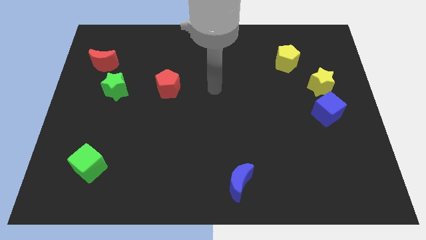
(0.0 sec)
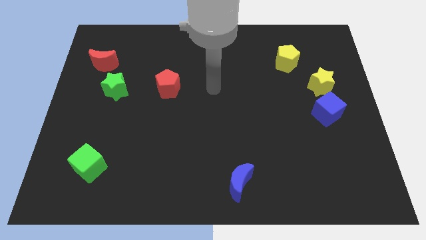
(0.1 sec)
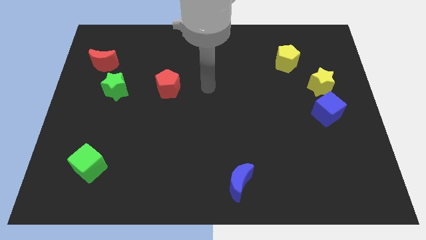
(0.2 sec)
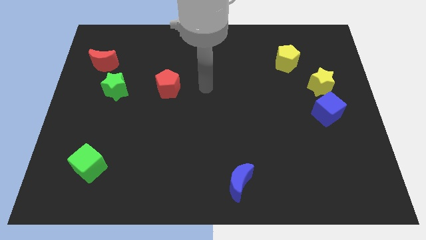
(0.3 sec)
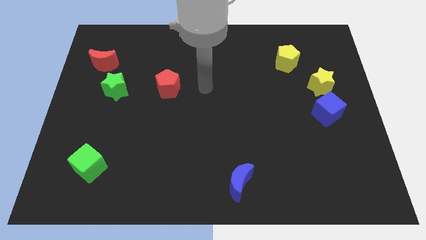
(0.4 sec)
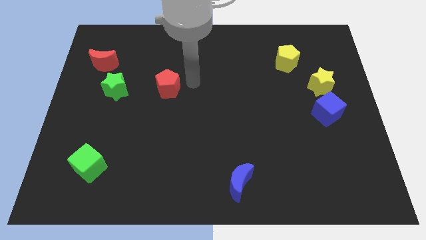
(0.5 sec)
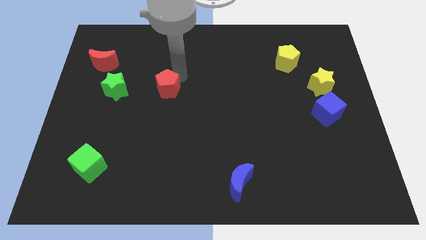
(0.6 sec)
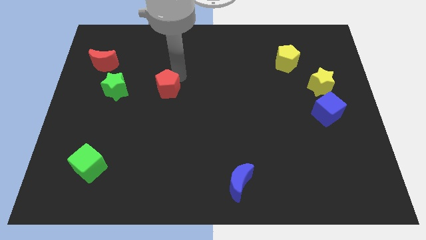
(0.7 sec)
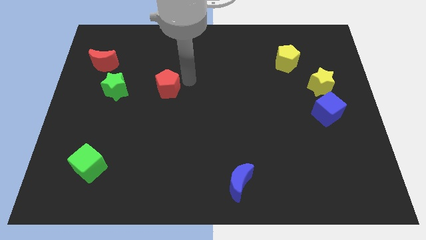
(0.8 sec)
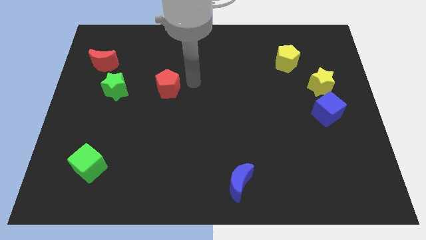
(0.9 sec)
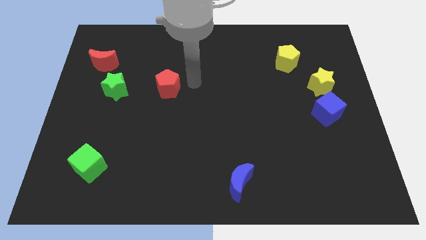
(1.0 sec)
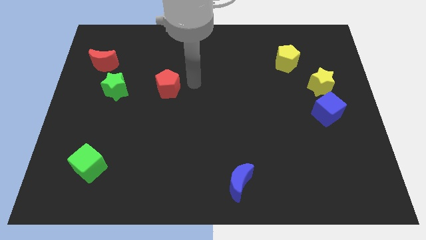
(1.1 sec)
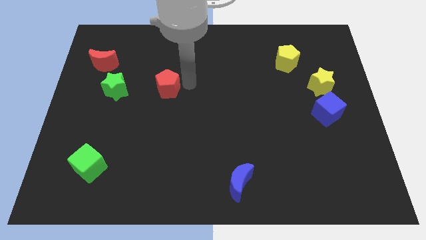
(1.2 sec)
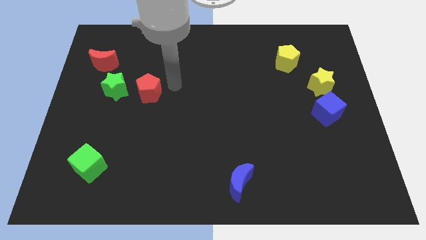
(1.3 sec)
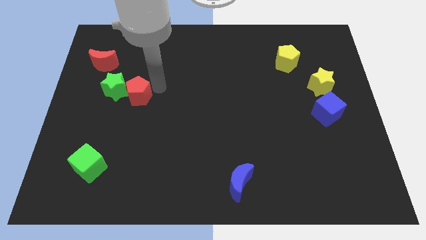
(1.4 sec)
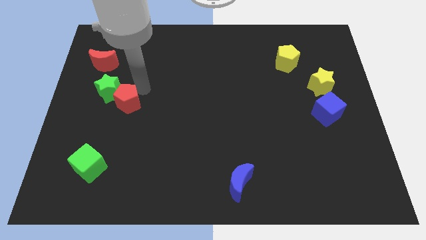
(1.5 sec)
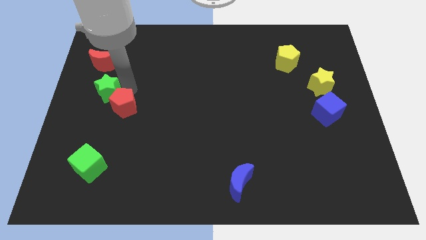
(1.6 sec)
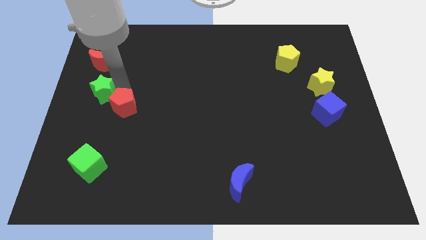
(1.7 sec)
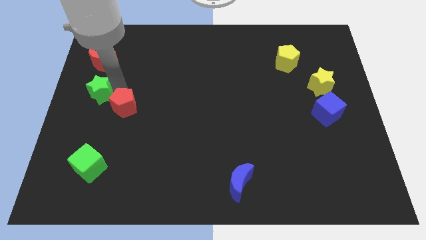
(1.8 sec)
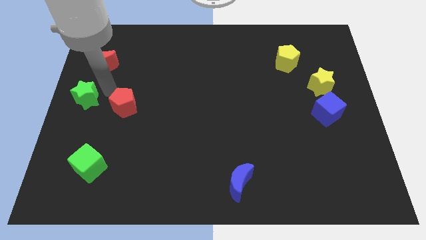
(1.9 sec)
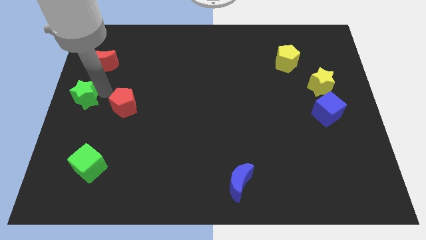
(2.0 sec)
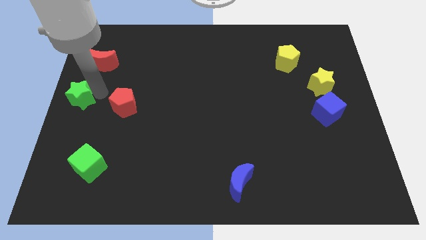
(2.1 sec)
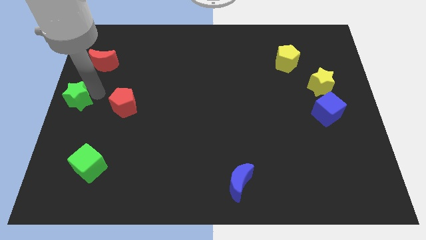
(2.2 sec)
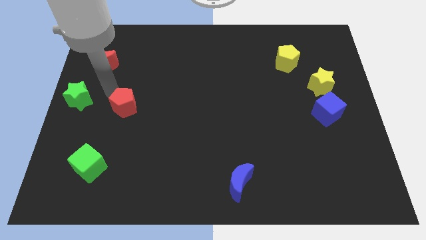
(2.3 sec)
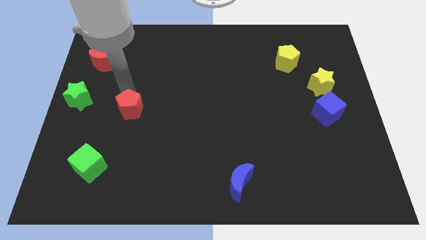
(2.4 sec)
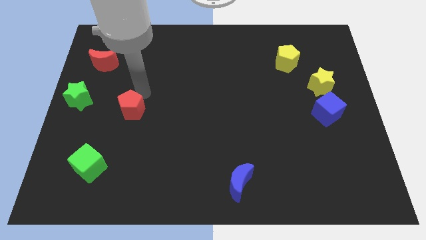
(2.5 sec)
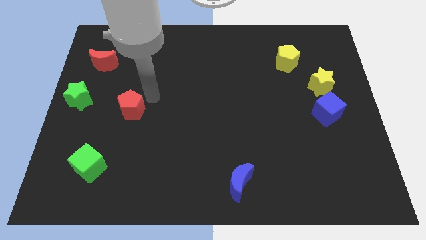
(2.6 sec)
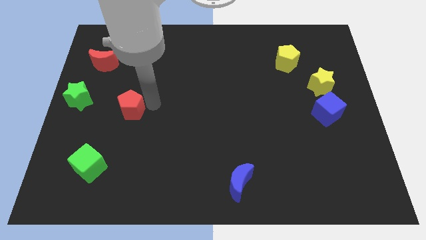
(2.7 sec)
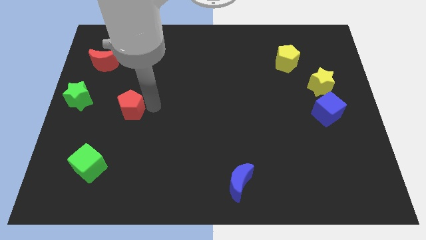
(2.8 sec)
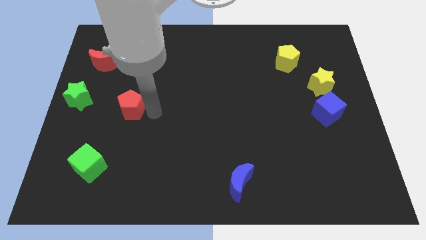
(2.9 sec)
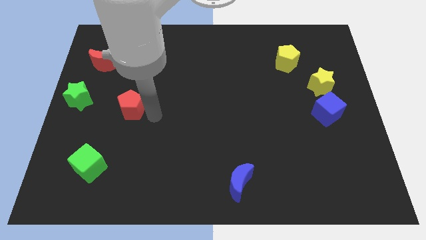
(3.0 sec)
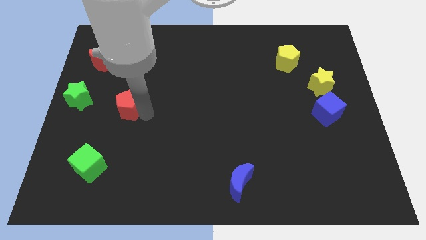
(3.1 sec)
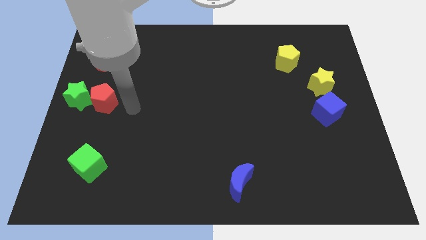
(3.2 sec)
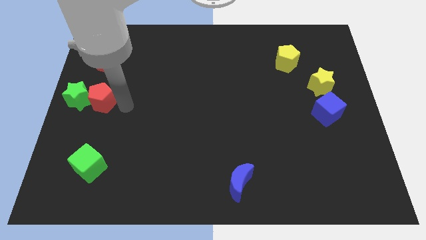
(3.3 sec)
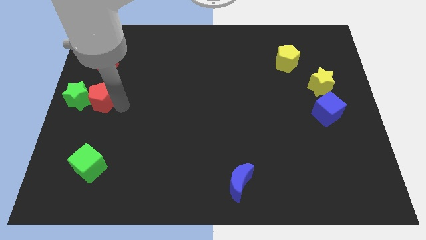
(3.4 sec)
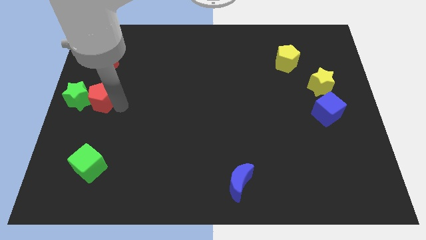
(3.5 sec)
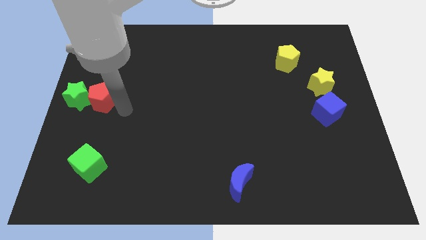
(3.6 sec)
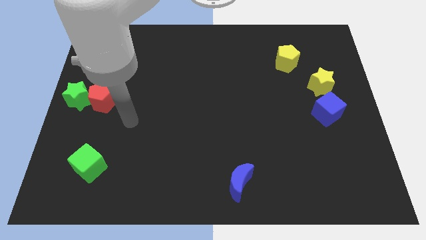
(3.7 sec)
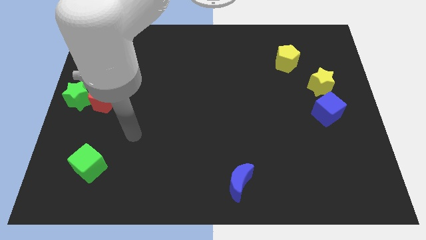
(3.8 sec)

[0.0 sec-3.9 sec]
move the red pentagon into the green star to the left center

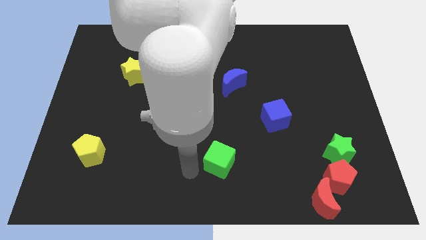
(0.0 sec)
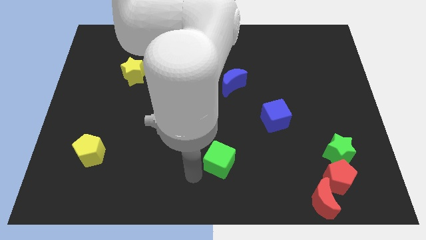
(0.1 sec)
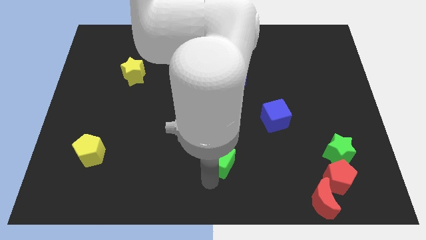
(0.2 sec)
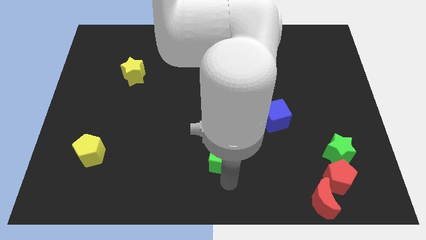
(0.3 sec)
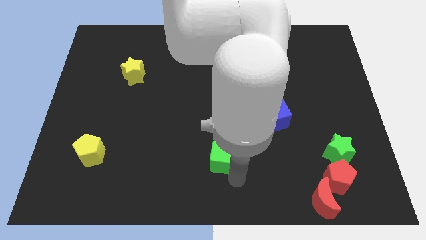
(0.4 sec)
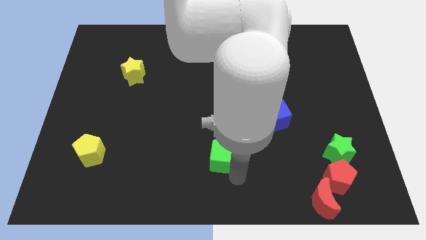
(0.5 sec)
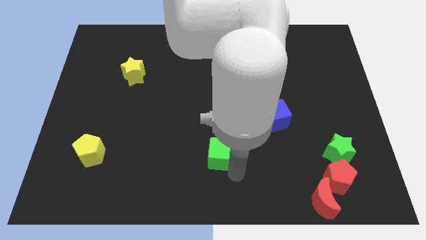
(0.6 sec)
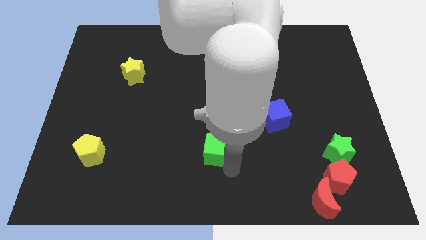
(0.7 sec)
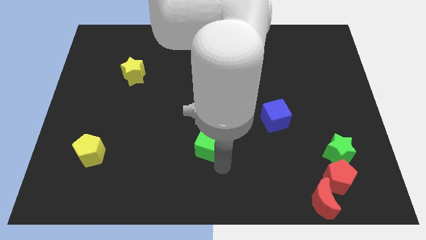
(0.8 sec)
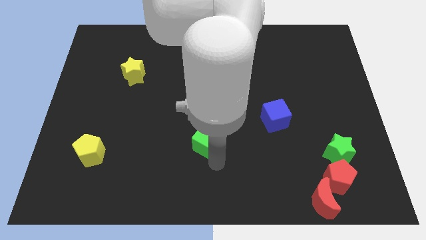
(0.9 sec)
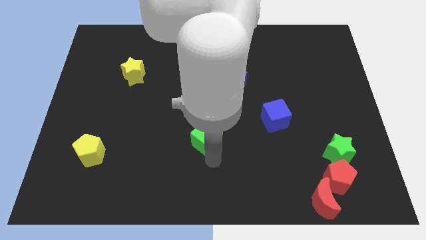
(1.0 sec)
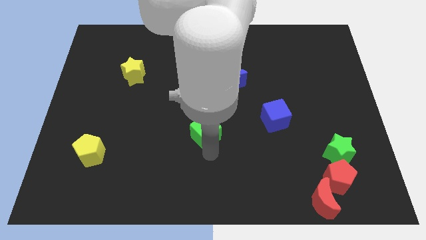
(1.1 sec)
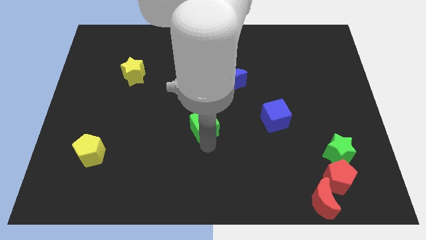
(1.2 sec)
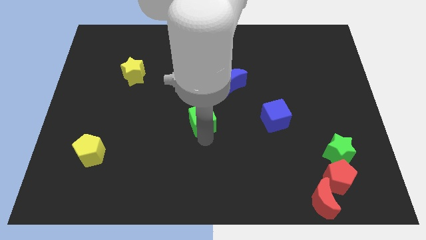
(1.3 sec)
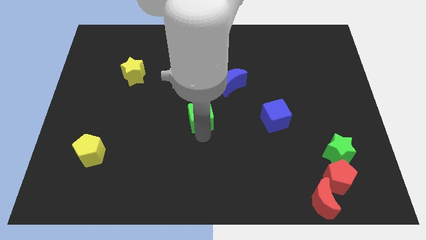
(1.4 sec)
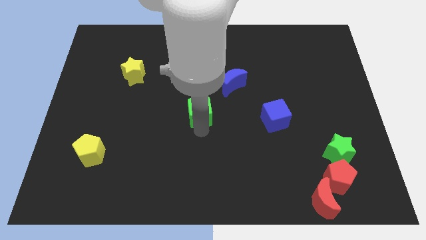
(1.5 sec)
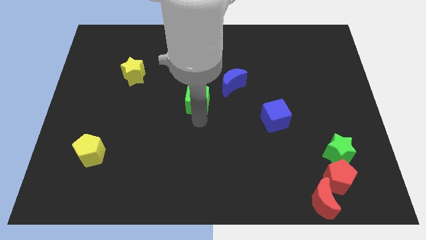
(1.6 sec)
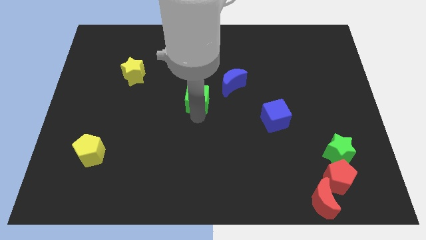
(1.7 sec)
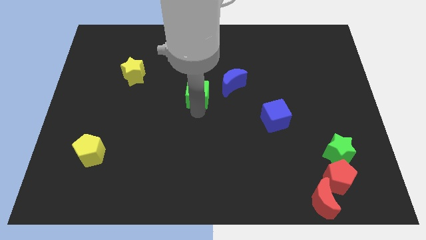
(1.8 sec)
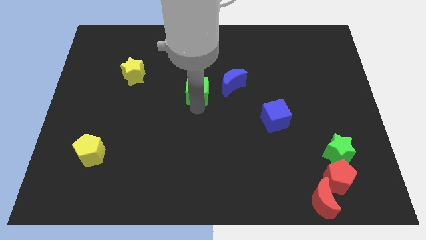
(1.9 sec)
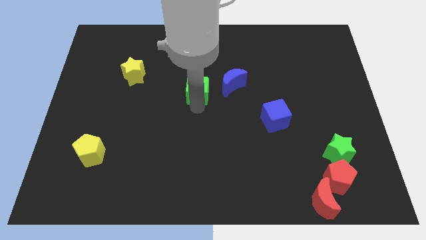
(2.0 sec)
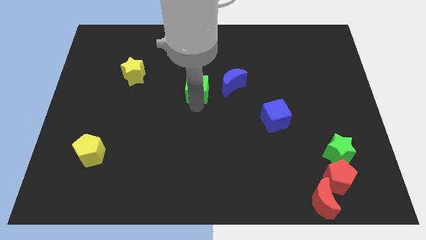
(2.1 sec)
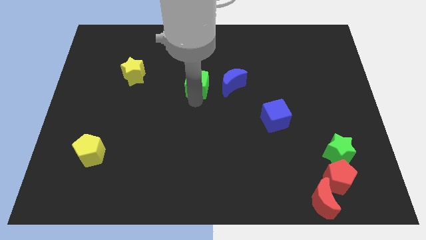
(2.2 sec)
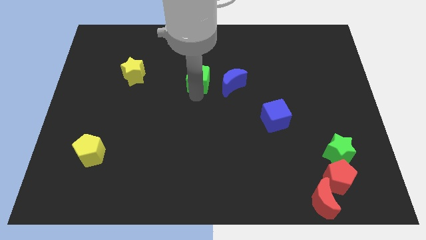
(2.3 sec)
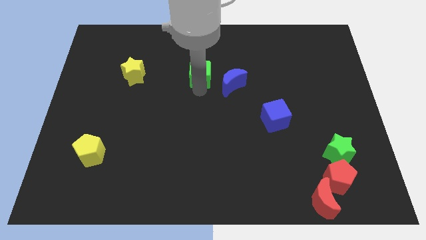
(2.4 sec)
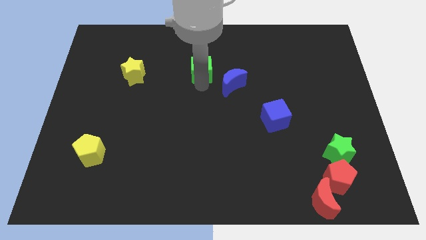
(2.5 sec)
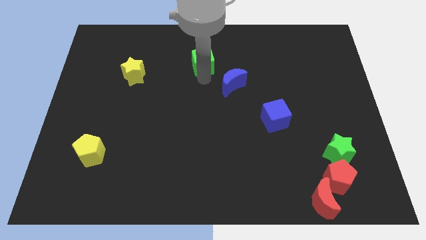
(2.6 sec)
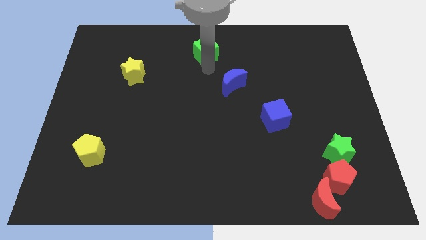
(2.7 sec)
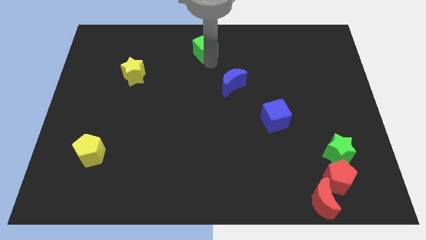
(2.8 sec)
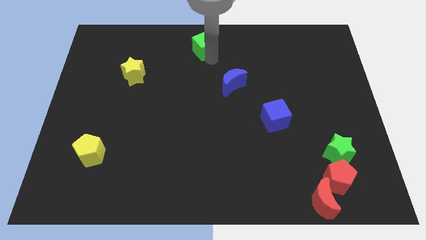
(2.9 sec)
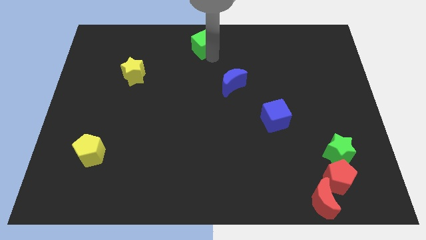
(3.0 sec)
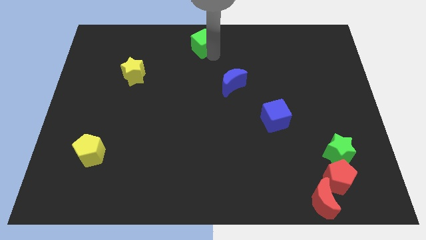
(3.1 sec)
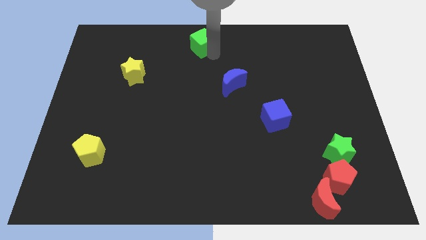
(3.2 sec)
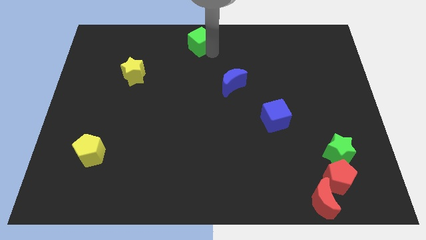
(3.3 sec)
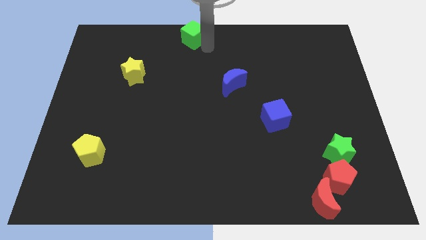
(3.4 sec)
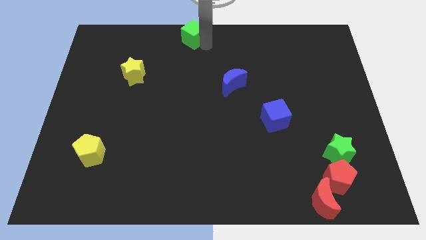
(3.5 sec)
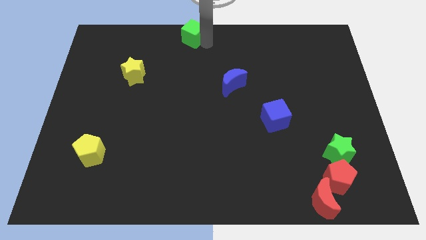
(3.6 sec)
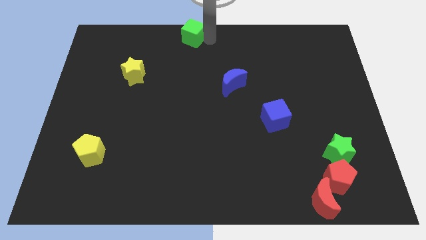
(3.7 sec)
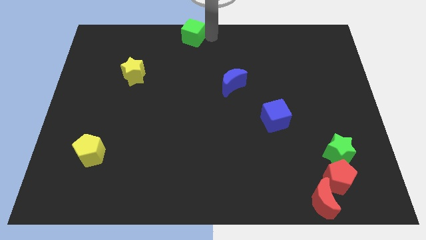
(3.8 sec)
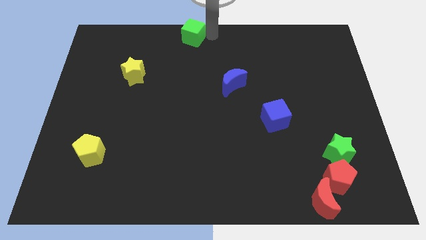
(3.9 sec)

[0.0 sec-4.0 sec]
drag the green cube to the top of the board

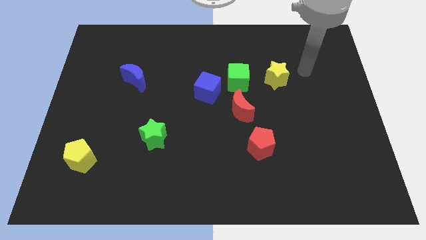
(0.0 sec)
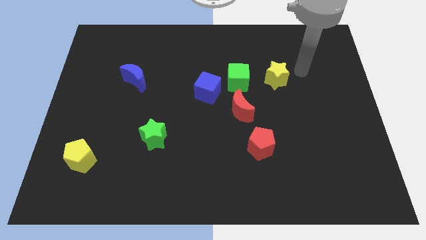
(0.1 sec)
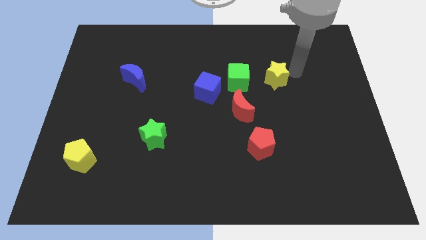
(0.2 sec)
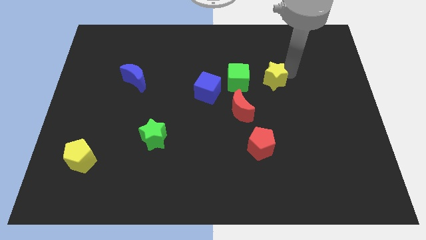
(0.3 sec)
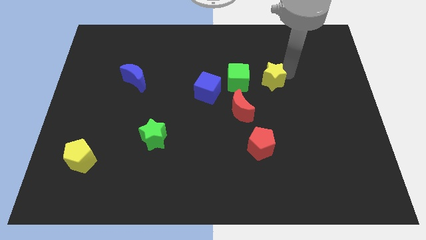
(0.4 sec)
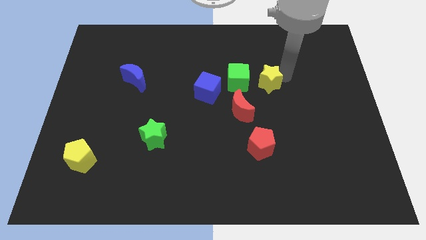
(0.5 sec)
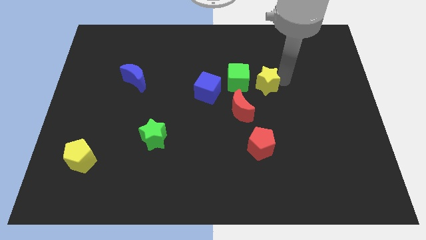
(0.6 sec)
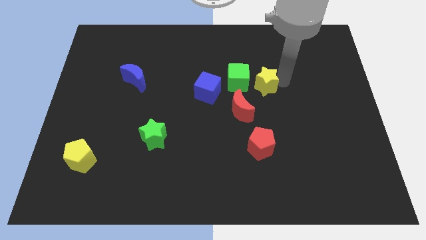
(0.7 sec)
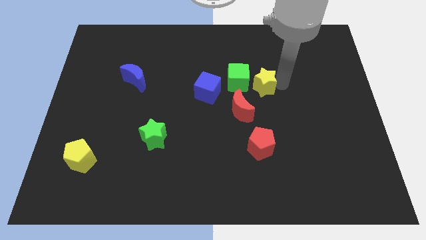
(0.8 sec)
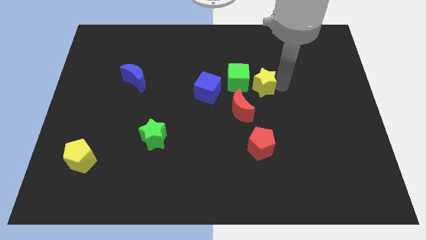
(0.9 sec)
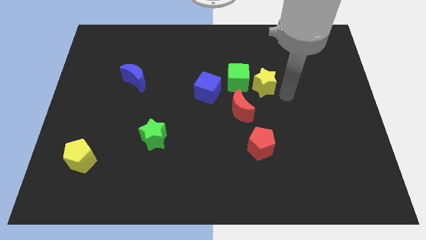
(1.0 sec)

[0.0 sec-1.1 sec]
place the yellow star towards to the green cube

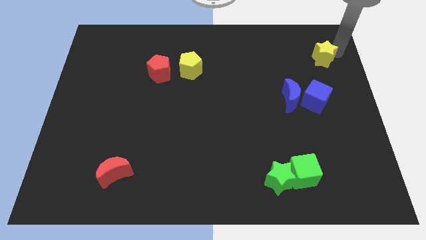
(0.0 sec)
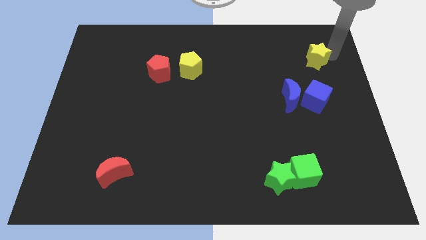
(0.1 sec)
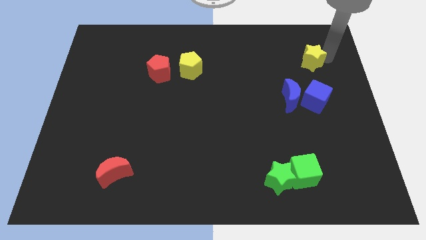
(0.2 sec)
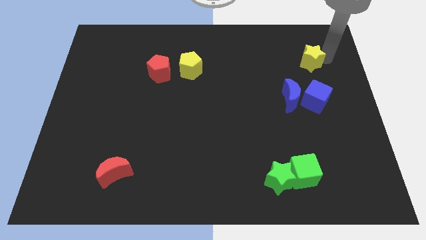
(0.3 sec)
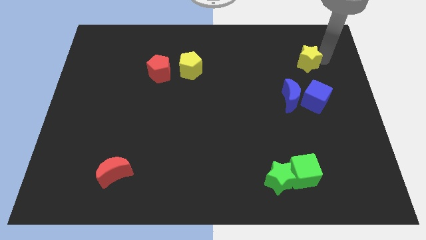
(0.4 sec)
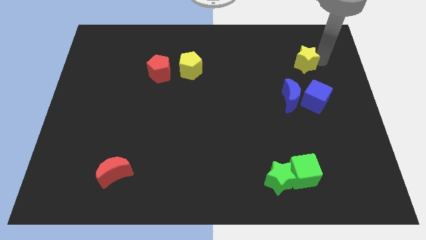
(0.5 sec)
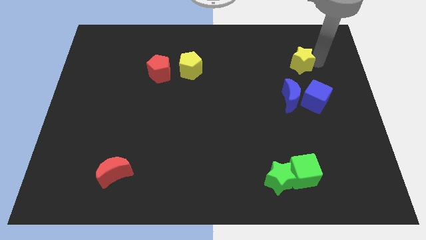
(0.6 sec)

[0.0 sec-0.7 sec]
move the yellow star slightly downwards
